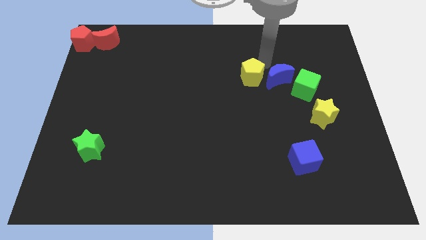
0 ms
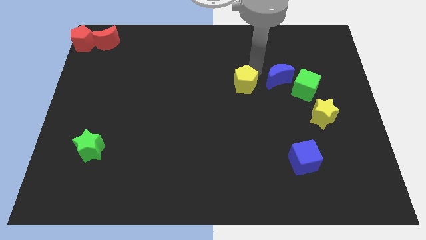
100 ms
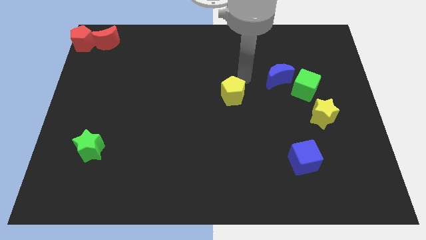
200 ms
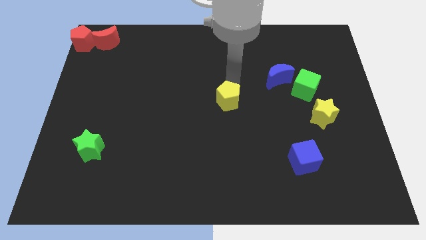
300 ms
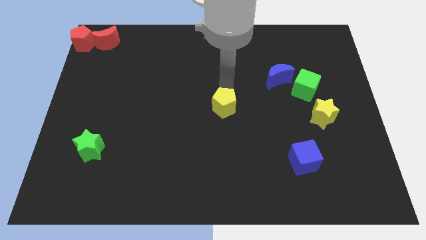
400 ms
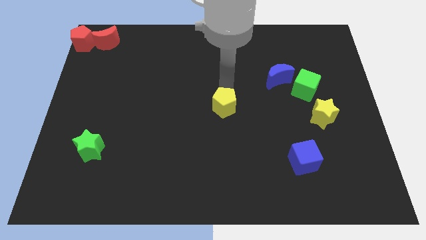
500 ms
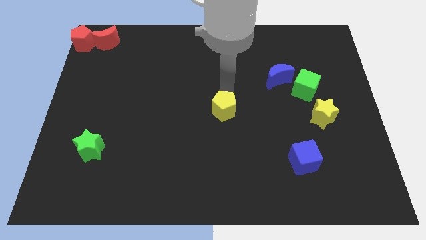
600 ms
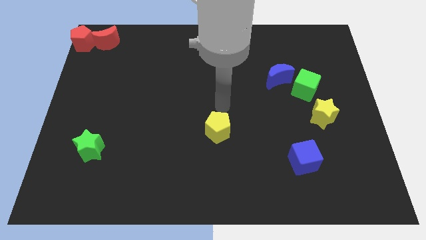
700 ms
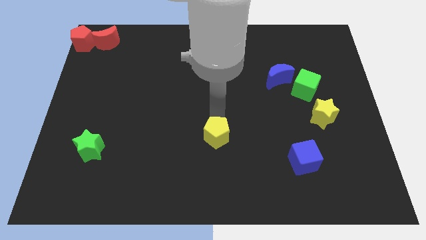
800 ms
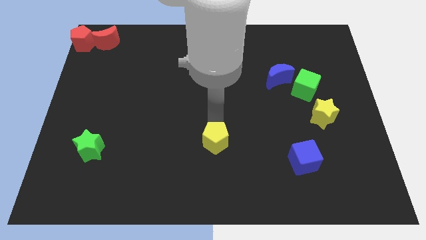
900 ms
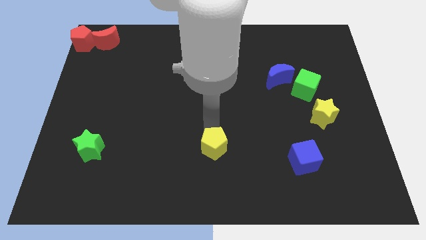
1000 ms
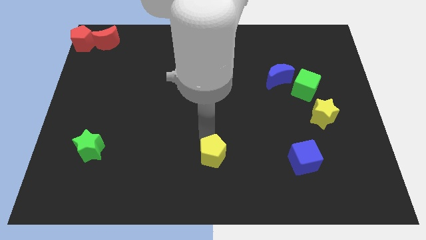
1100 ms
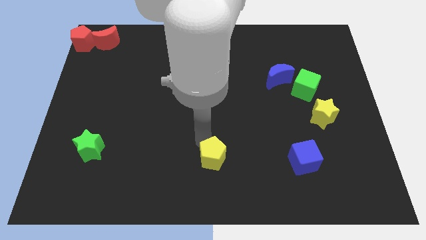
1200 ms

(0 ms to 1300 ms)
move the yellow pentagon in between the green star and blue cube

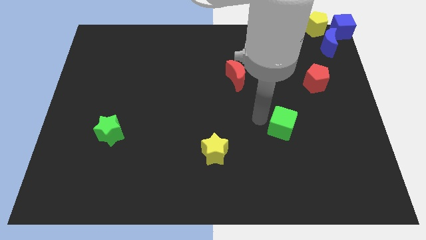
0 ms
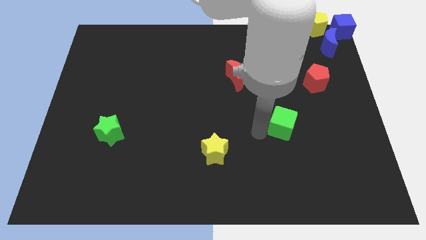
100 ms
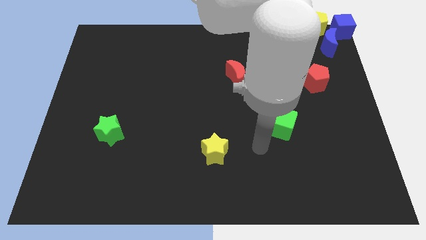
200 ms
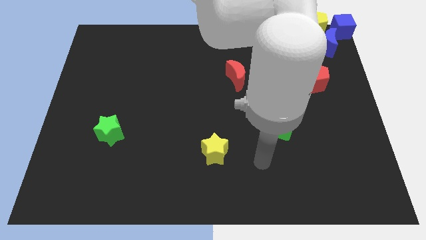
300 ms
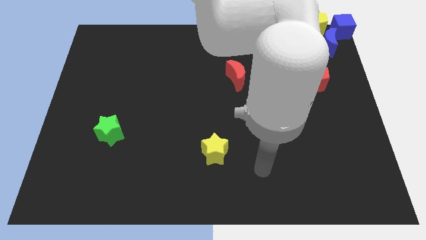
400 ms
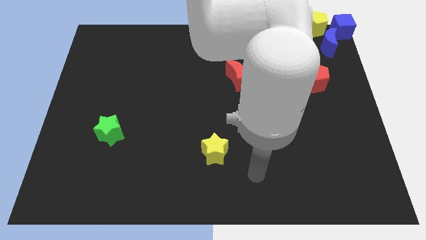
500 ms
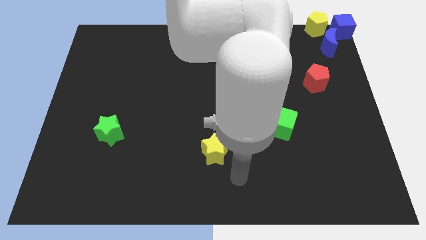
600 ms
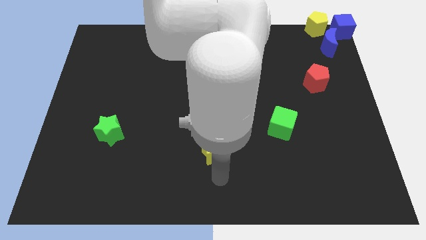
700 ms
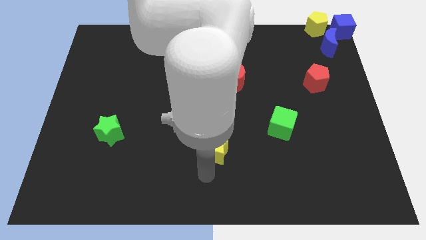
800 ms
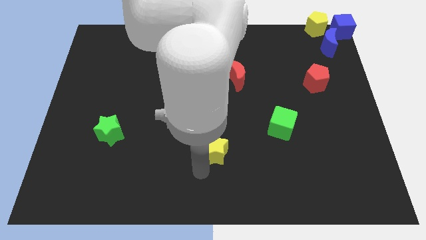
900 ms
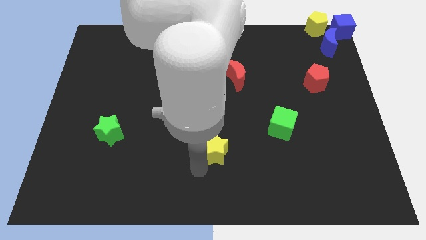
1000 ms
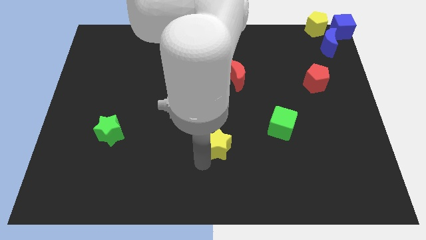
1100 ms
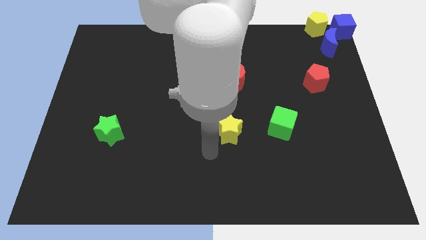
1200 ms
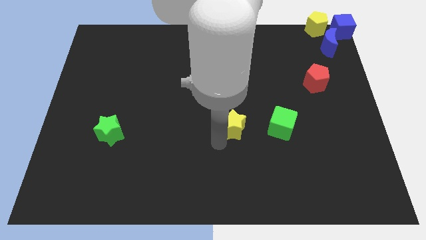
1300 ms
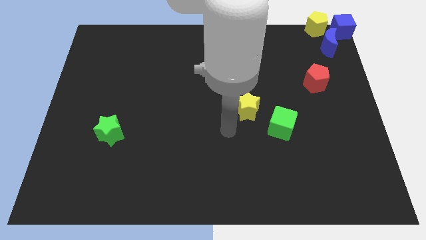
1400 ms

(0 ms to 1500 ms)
move the yellow star to the left of the green cube

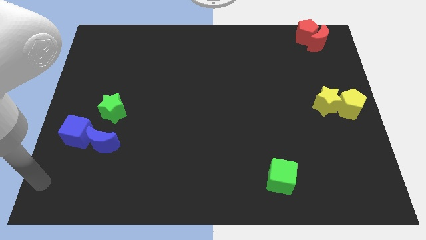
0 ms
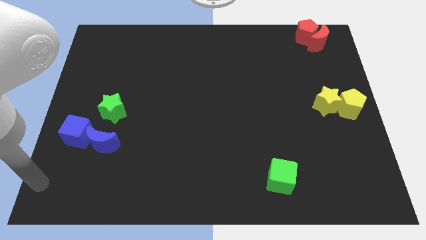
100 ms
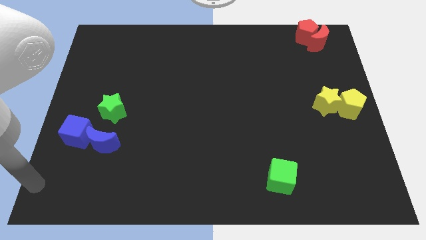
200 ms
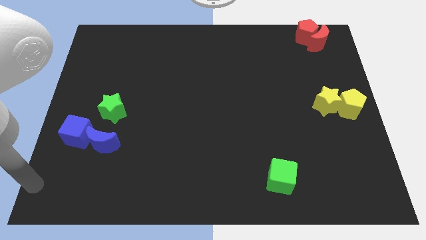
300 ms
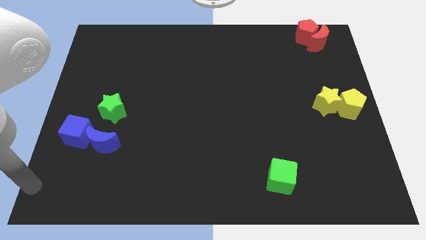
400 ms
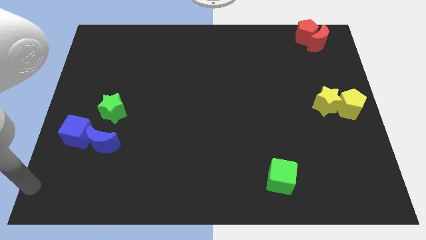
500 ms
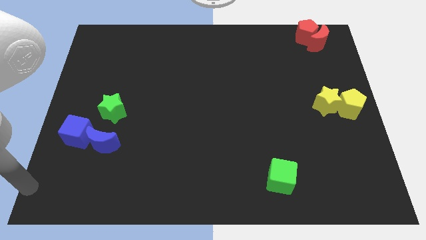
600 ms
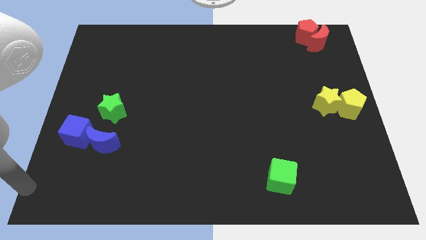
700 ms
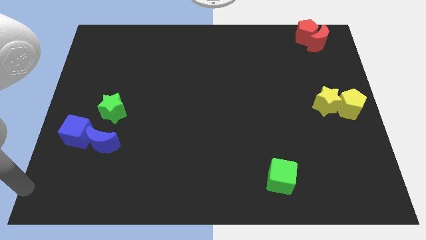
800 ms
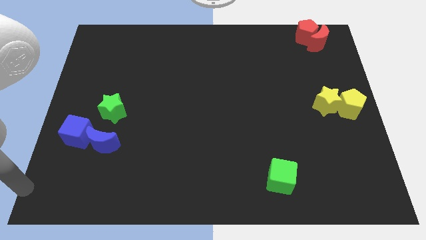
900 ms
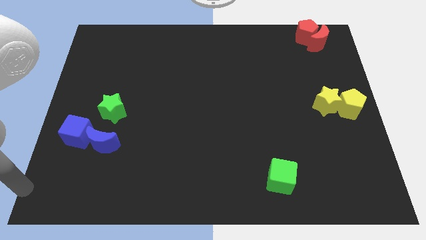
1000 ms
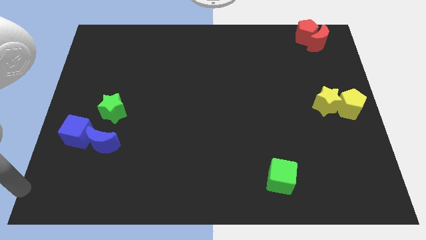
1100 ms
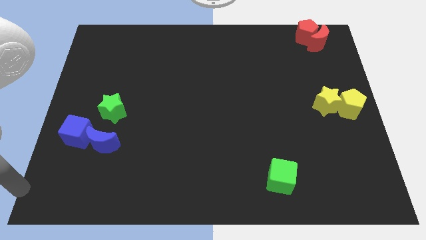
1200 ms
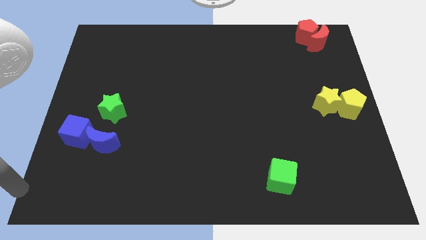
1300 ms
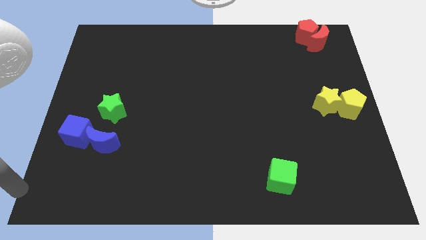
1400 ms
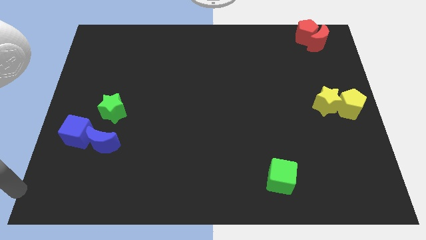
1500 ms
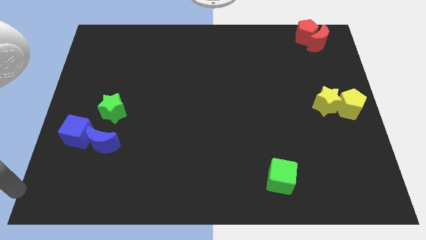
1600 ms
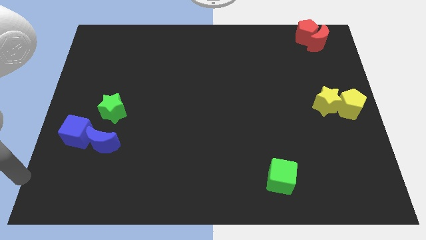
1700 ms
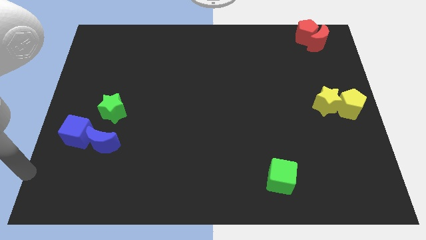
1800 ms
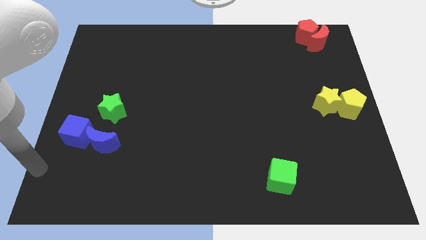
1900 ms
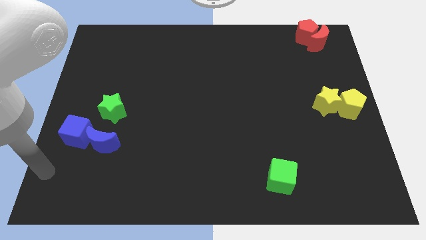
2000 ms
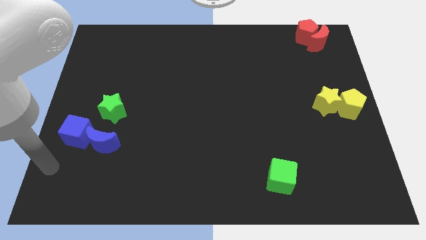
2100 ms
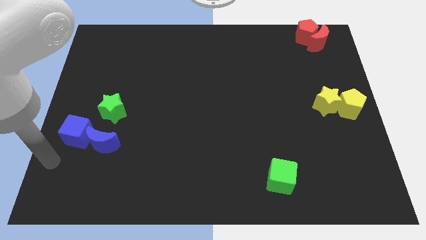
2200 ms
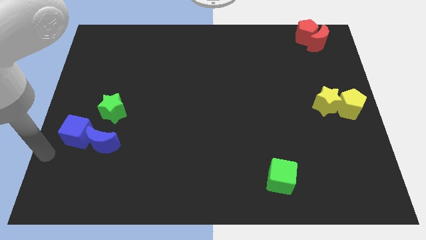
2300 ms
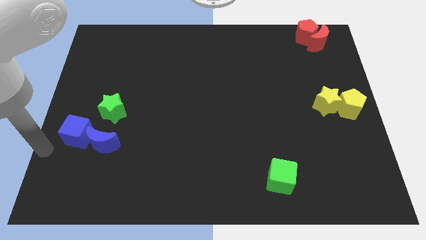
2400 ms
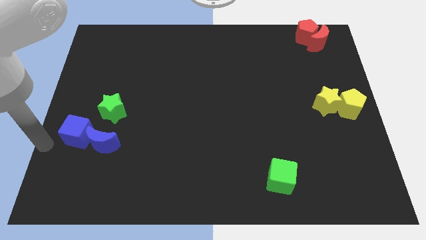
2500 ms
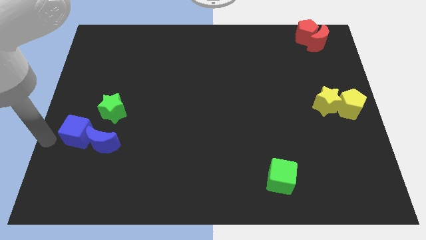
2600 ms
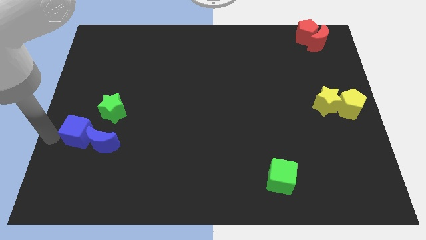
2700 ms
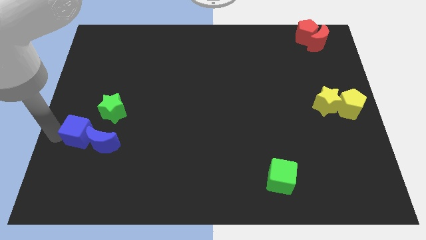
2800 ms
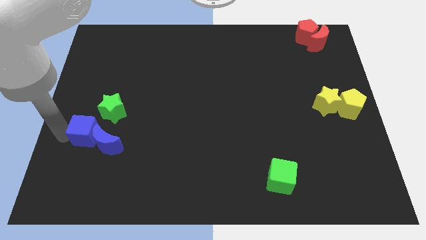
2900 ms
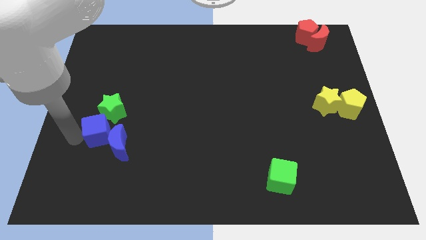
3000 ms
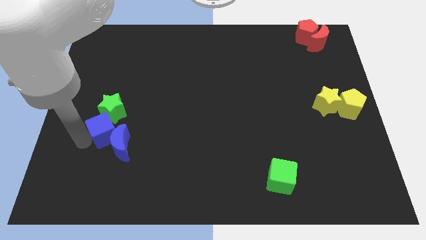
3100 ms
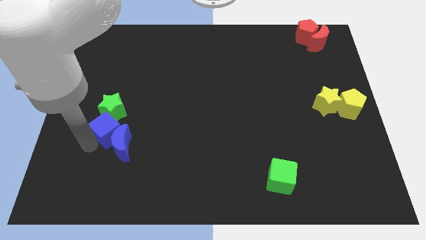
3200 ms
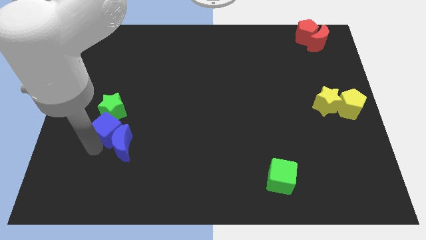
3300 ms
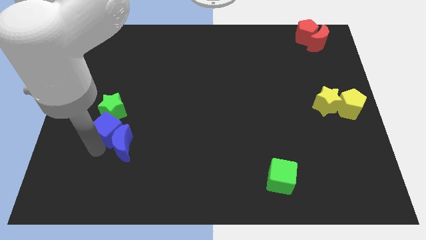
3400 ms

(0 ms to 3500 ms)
place the blue cube bottom to the green star

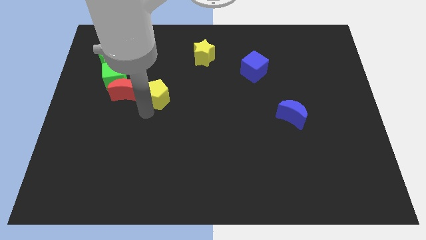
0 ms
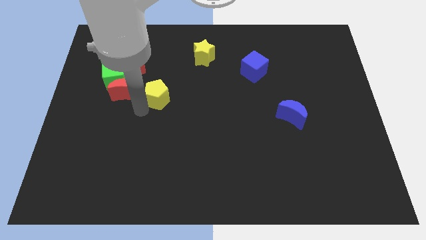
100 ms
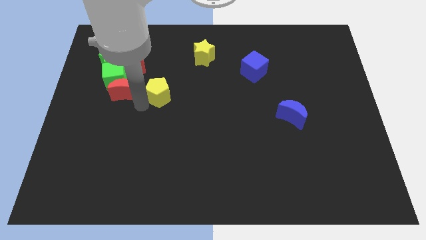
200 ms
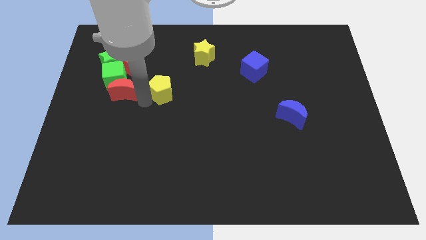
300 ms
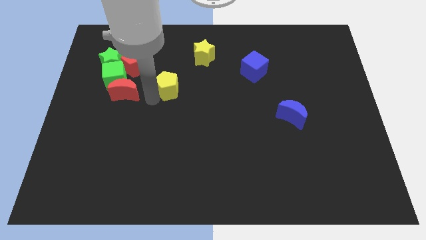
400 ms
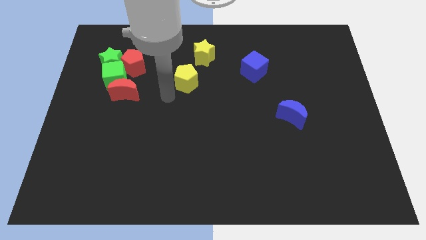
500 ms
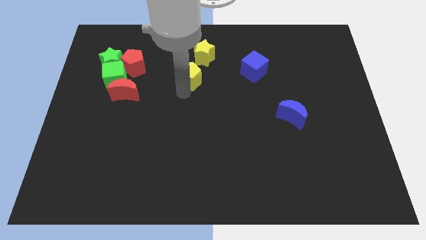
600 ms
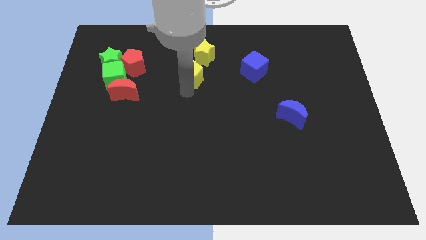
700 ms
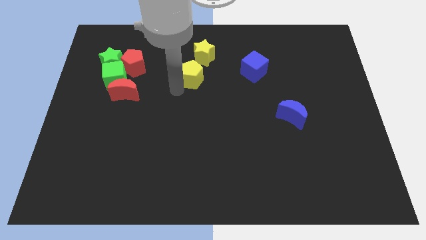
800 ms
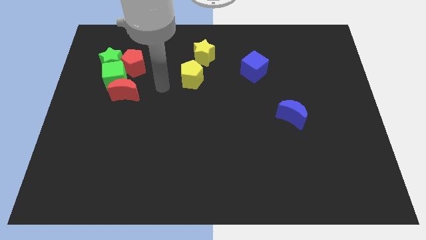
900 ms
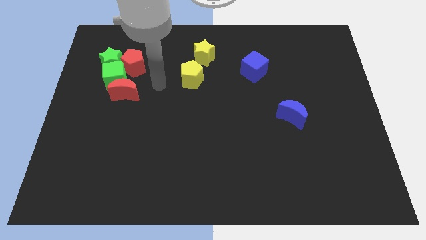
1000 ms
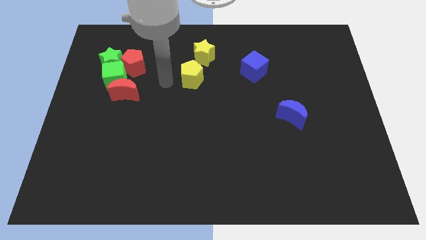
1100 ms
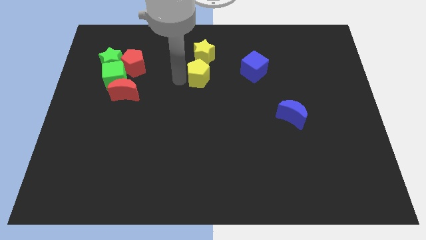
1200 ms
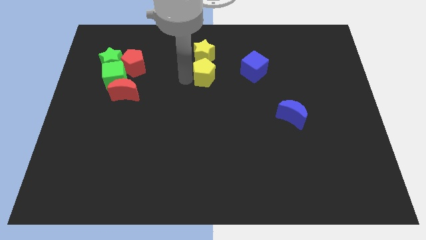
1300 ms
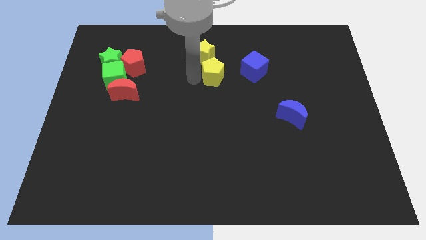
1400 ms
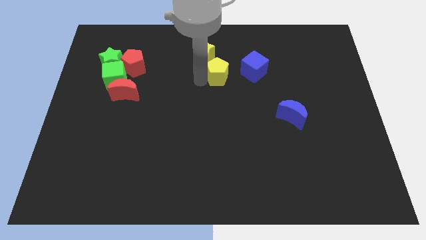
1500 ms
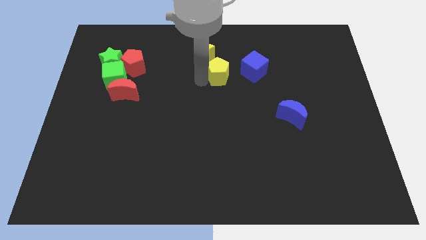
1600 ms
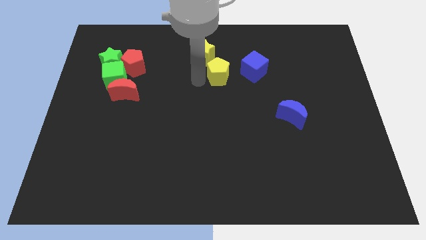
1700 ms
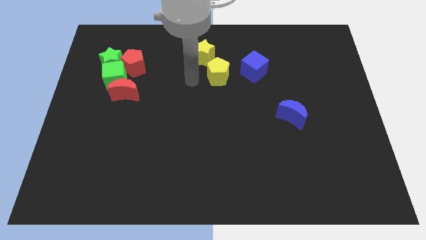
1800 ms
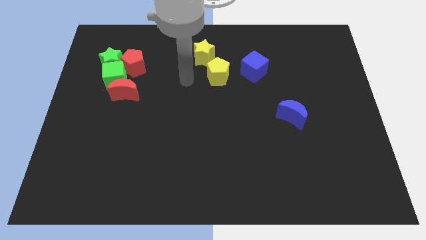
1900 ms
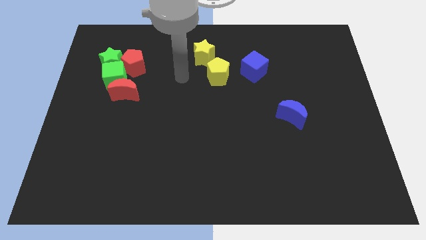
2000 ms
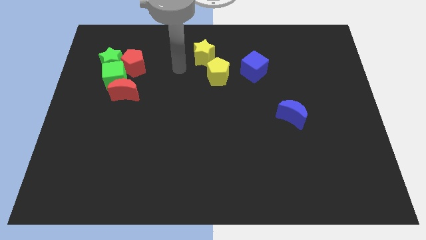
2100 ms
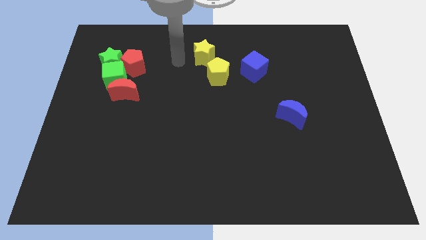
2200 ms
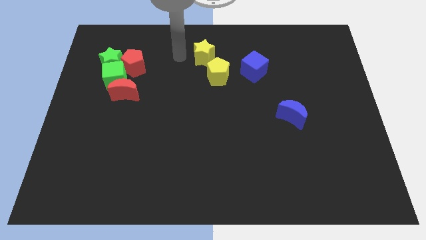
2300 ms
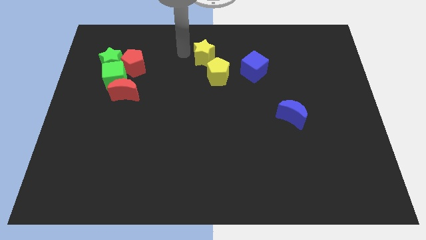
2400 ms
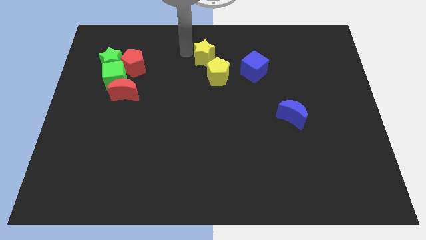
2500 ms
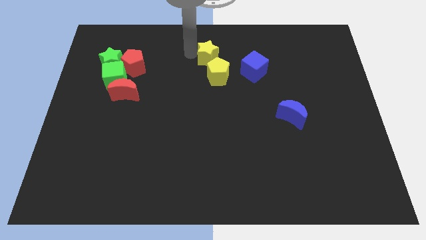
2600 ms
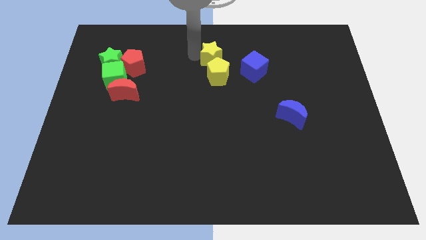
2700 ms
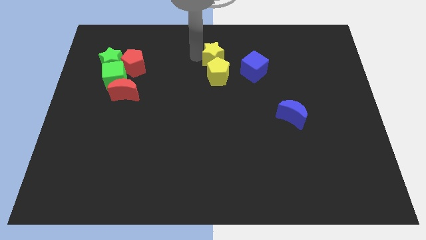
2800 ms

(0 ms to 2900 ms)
place the yellow pentagon towards the bottom side of the yellow star
